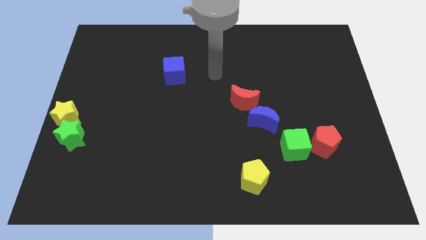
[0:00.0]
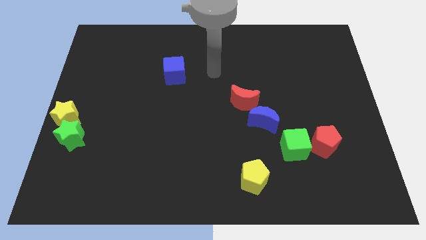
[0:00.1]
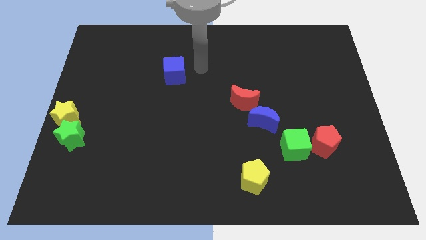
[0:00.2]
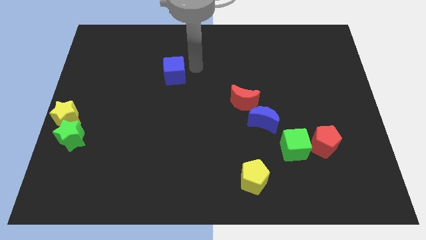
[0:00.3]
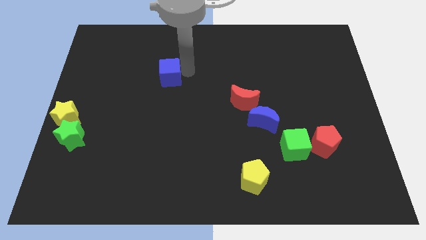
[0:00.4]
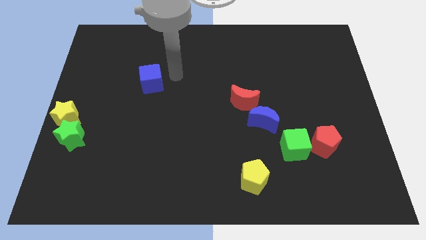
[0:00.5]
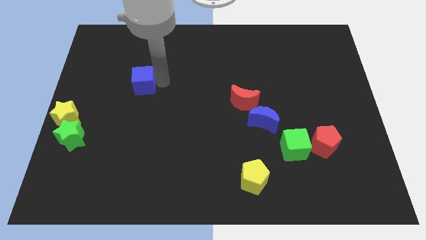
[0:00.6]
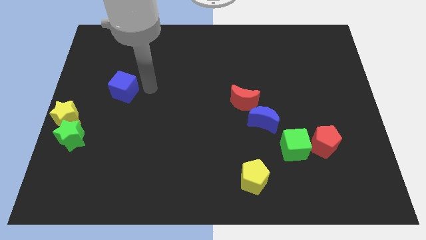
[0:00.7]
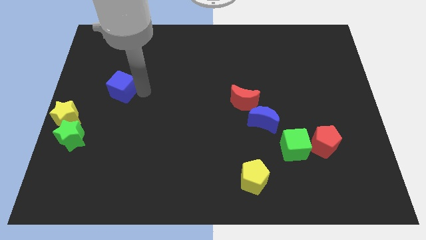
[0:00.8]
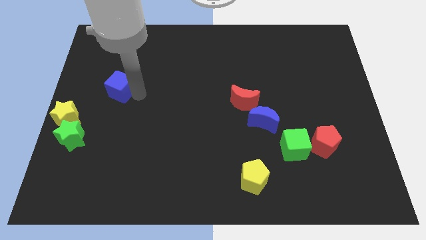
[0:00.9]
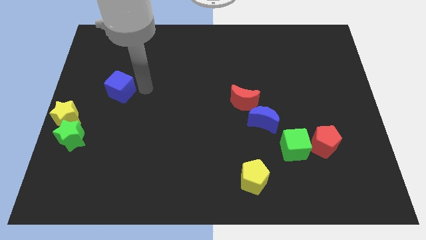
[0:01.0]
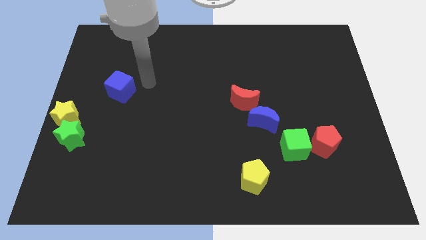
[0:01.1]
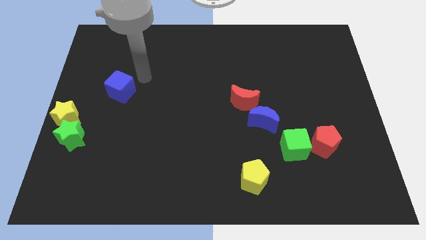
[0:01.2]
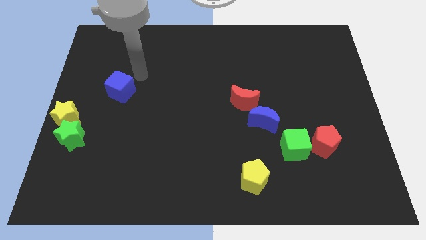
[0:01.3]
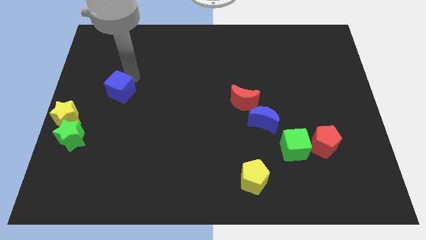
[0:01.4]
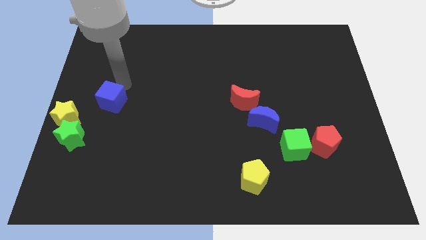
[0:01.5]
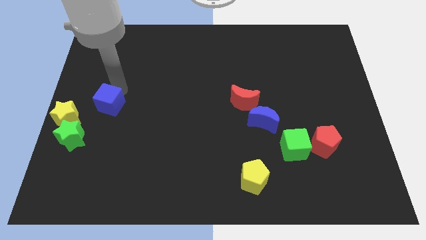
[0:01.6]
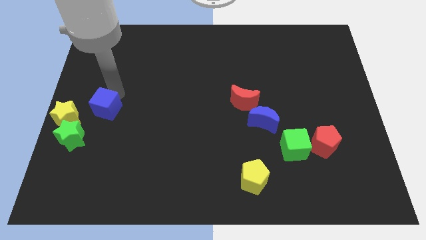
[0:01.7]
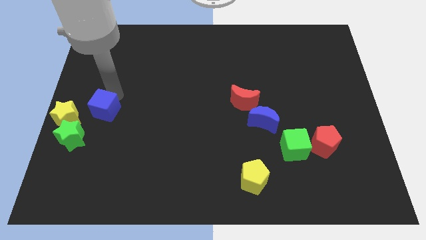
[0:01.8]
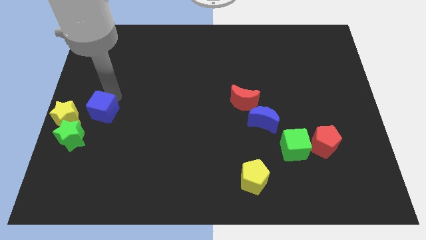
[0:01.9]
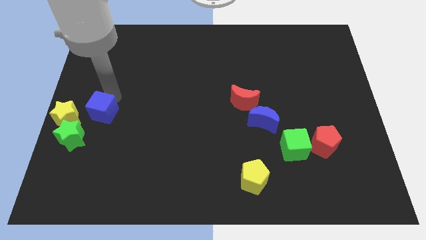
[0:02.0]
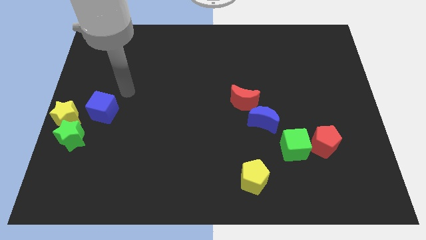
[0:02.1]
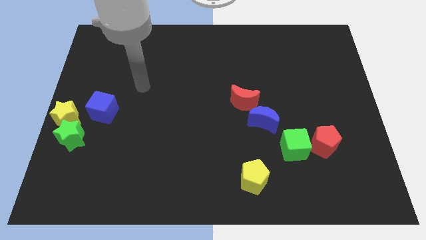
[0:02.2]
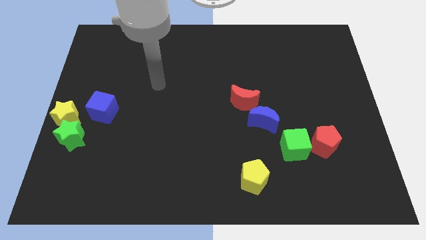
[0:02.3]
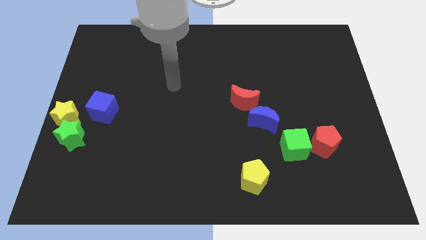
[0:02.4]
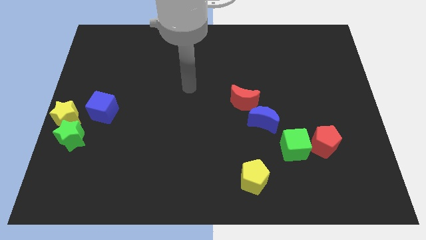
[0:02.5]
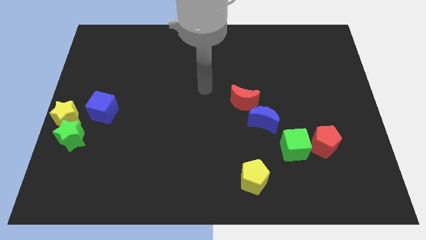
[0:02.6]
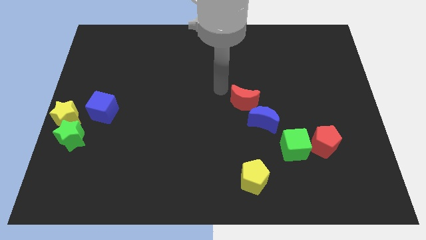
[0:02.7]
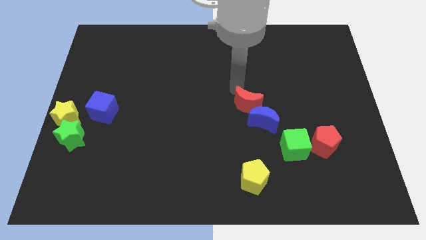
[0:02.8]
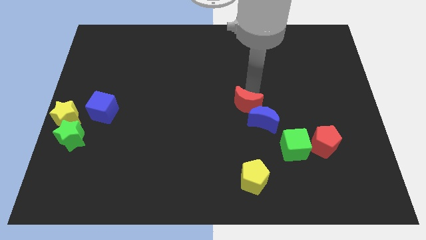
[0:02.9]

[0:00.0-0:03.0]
push the blue cube towards the yellow star

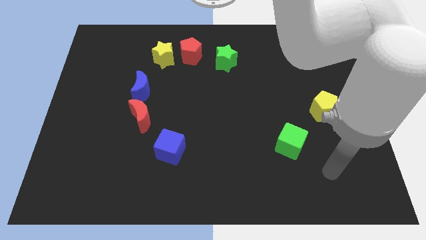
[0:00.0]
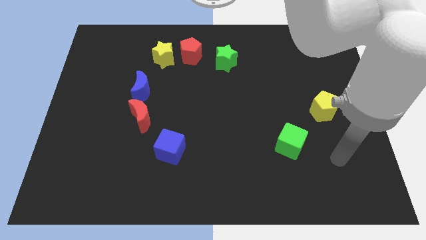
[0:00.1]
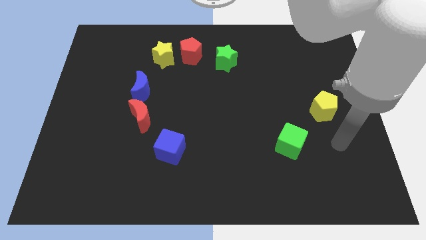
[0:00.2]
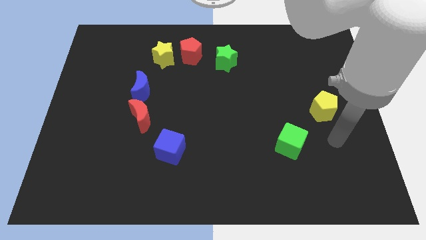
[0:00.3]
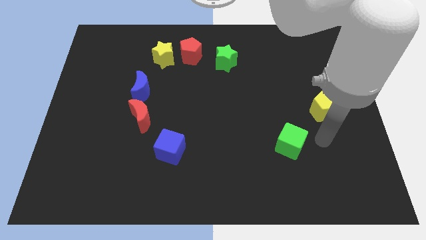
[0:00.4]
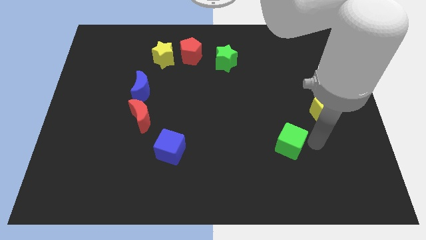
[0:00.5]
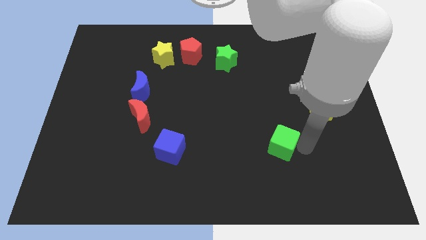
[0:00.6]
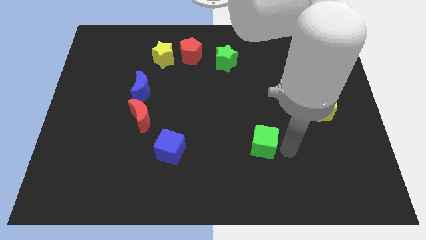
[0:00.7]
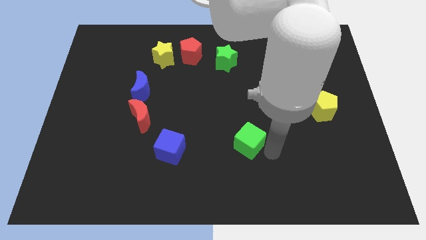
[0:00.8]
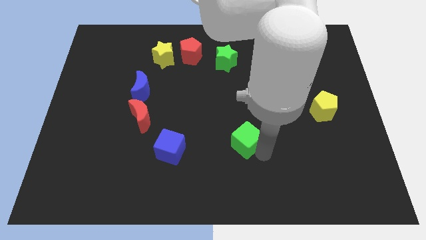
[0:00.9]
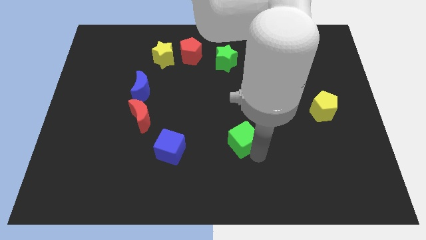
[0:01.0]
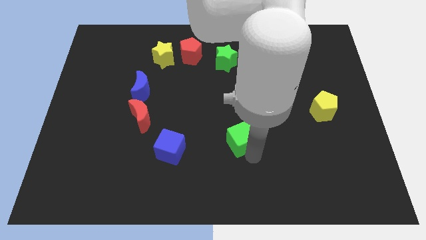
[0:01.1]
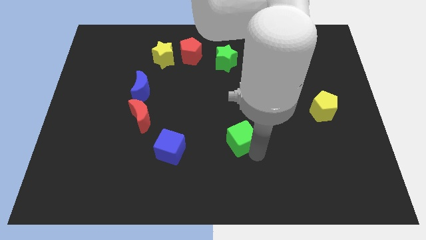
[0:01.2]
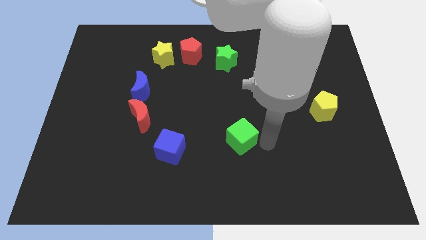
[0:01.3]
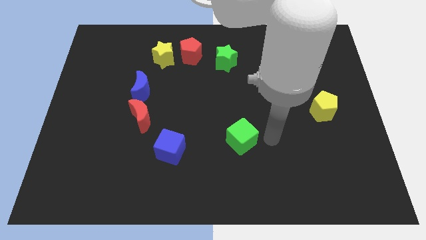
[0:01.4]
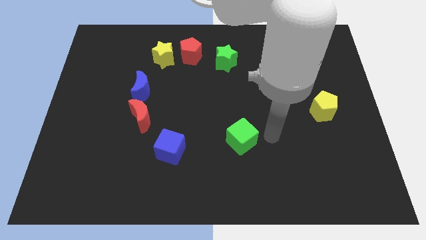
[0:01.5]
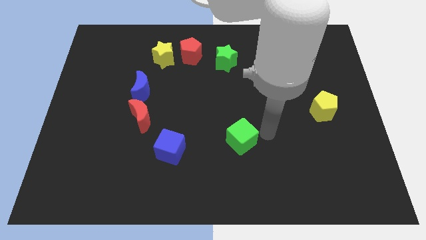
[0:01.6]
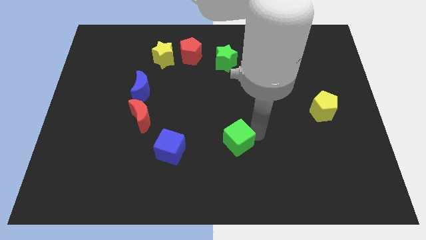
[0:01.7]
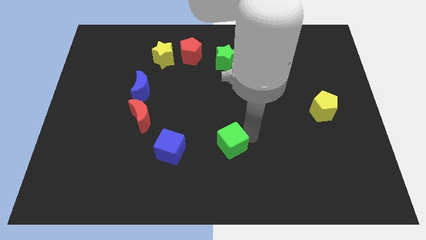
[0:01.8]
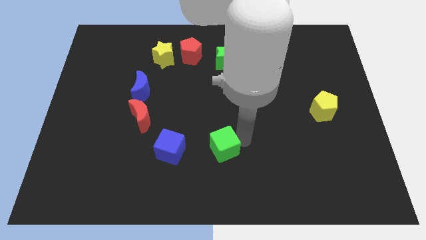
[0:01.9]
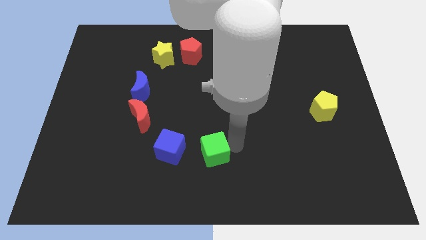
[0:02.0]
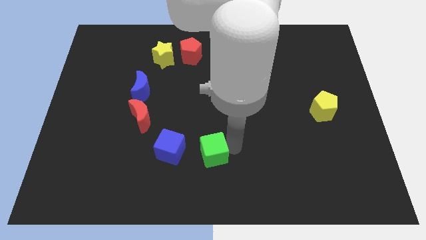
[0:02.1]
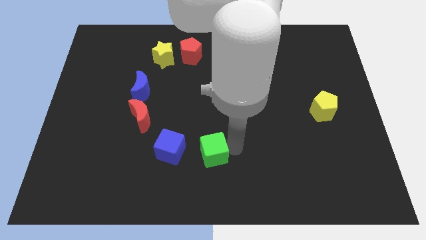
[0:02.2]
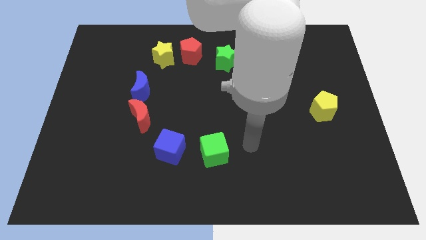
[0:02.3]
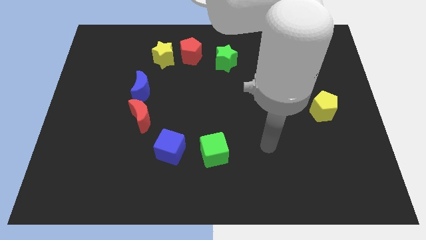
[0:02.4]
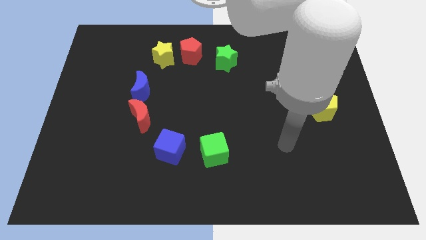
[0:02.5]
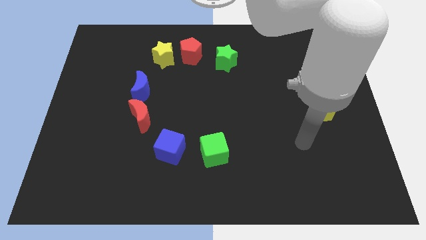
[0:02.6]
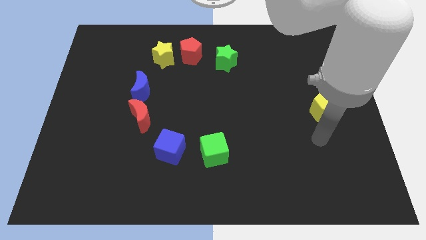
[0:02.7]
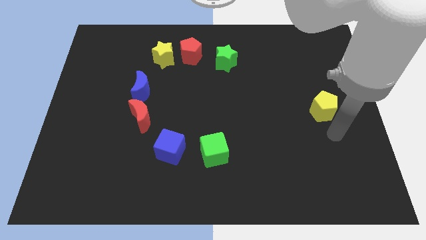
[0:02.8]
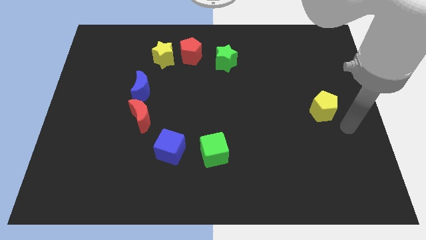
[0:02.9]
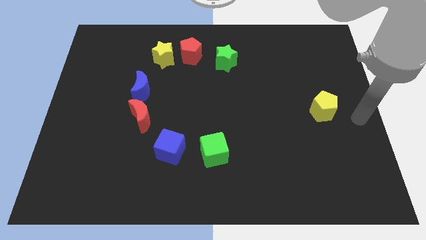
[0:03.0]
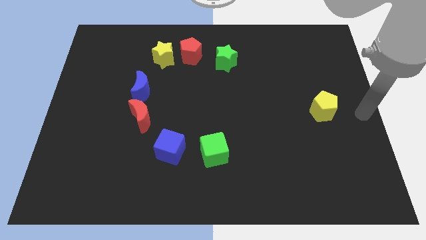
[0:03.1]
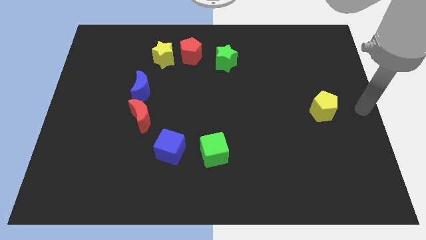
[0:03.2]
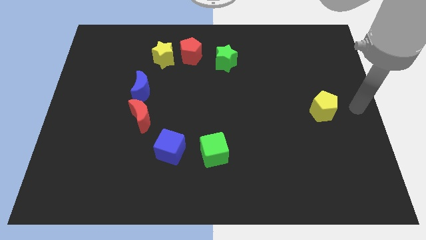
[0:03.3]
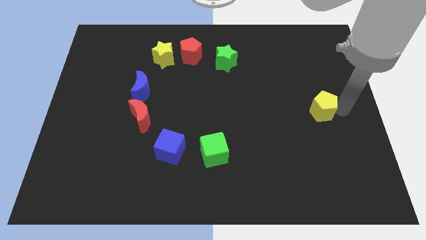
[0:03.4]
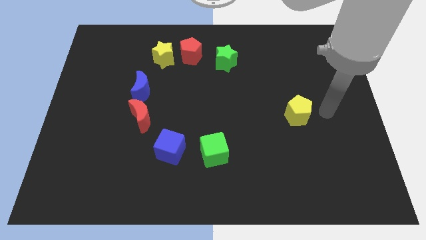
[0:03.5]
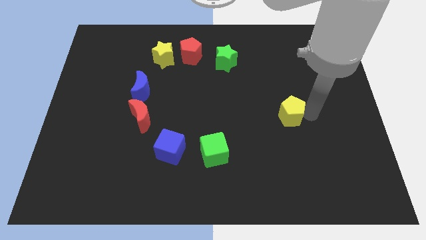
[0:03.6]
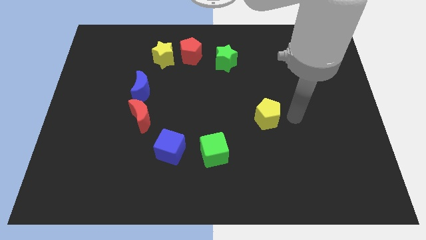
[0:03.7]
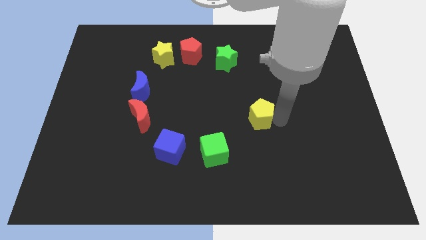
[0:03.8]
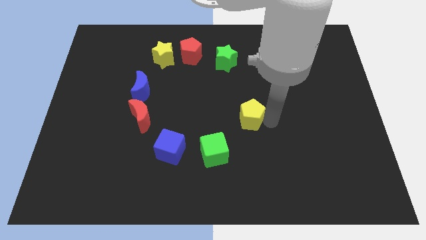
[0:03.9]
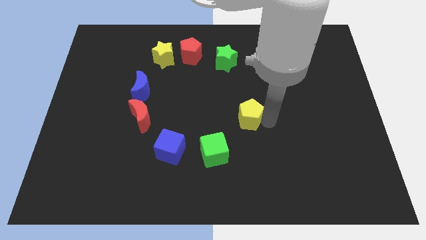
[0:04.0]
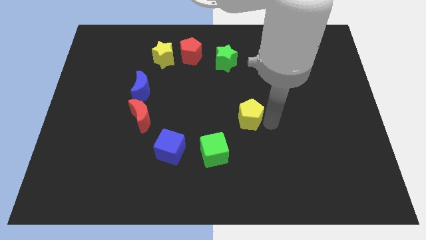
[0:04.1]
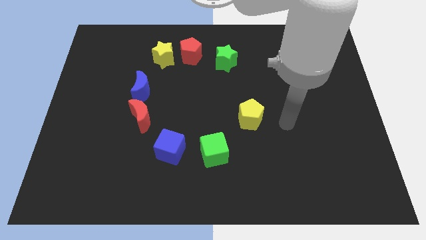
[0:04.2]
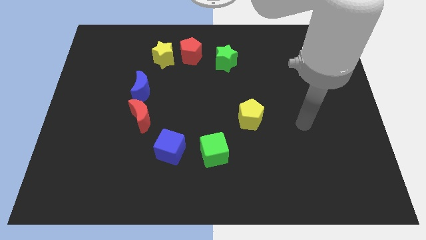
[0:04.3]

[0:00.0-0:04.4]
make a circle with all the blocks

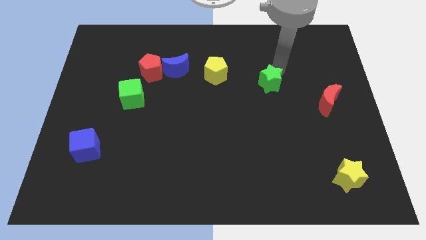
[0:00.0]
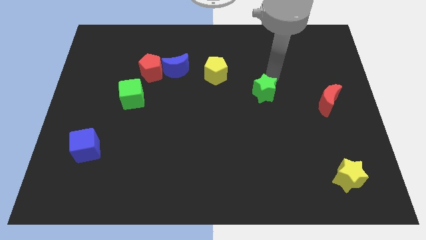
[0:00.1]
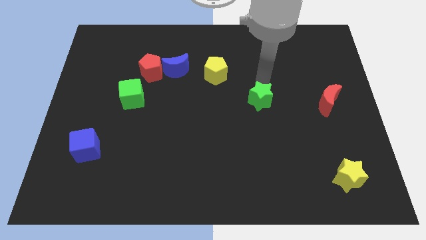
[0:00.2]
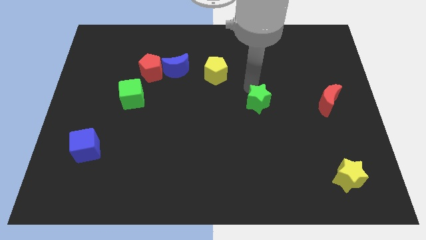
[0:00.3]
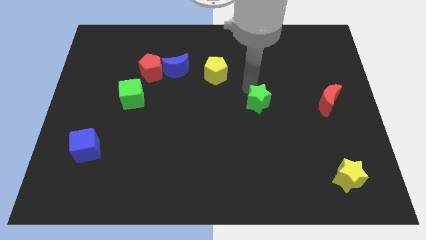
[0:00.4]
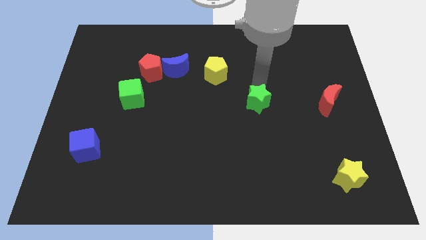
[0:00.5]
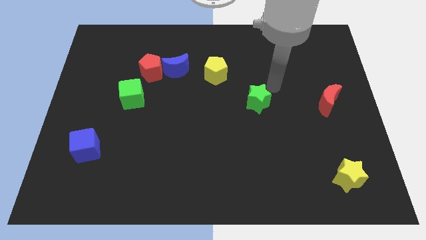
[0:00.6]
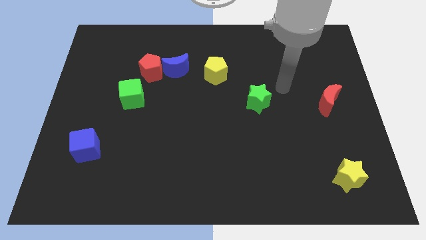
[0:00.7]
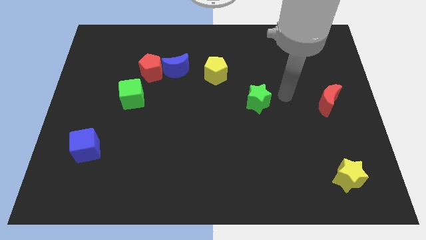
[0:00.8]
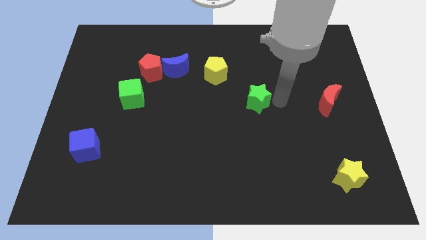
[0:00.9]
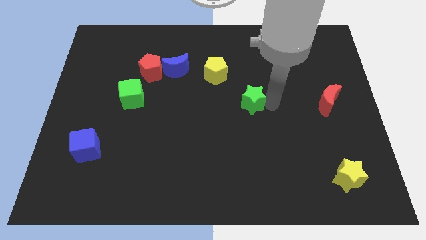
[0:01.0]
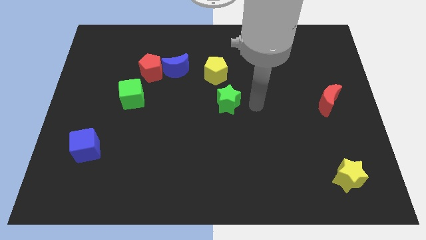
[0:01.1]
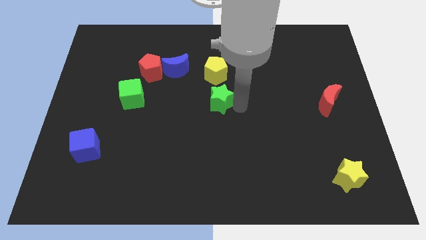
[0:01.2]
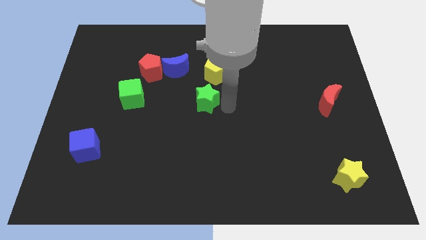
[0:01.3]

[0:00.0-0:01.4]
move the green star to the bottom right side of the yellow pentagon

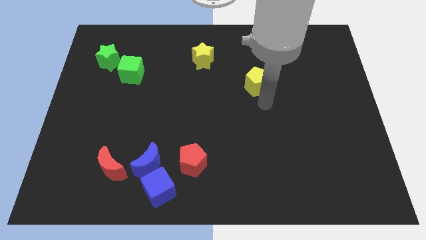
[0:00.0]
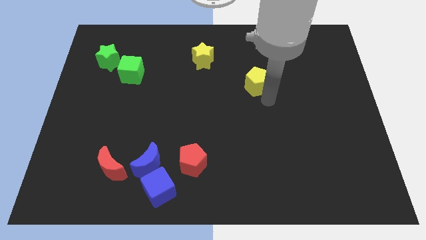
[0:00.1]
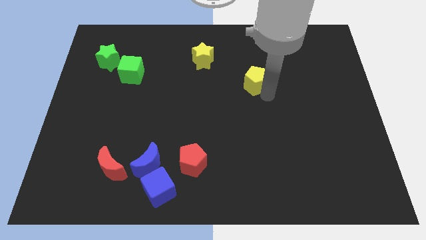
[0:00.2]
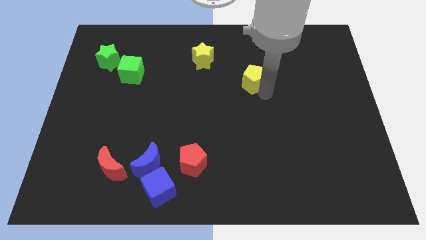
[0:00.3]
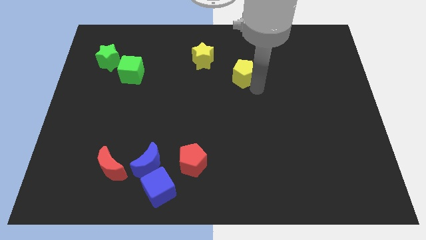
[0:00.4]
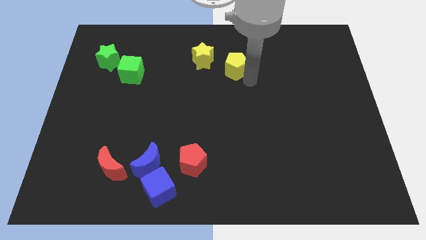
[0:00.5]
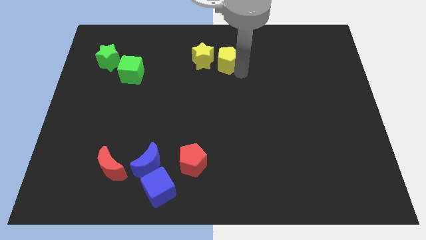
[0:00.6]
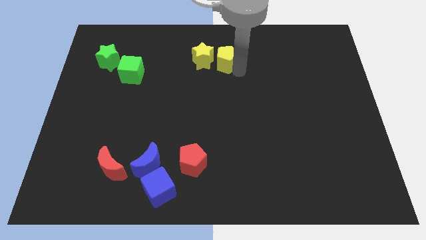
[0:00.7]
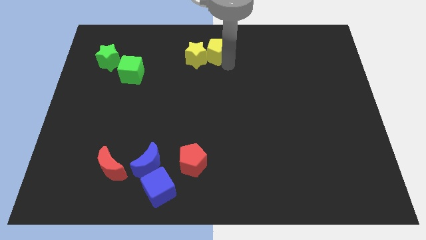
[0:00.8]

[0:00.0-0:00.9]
move the yellow pentagon to the right of the yellow star
